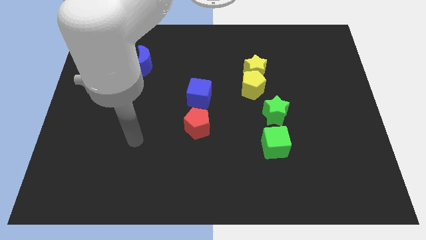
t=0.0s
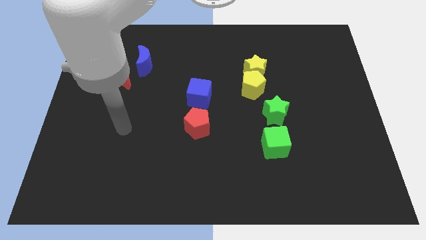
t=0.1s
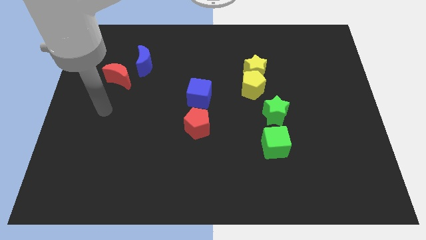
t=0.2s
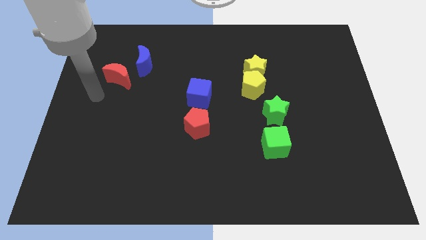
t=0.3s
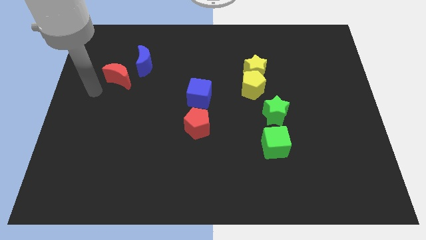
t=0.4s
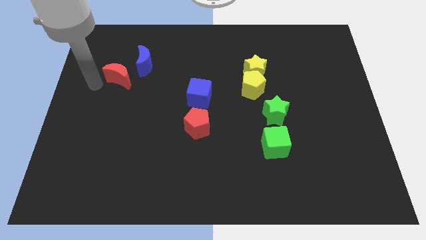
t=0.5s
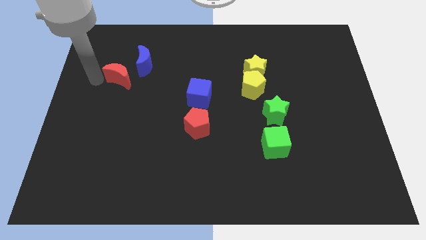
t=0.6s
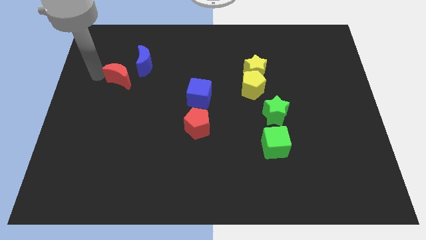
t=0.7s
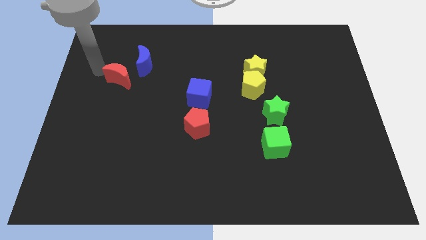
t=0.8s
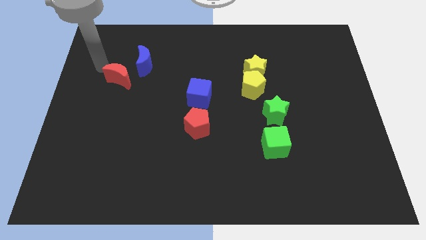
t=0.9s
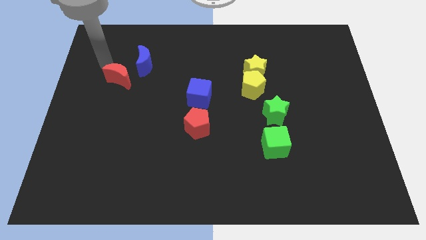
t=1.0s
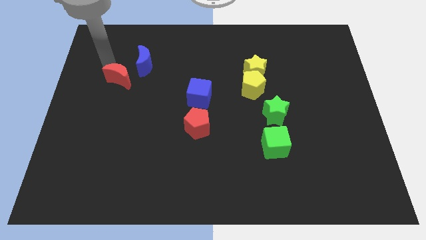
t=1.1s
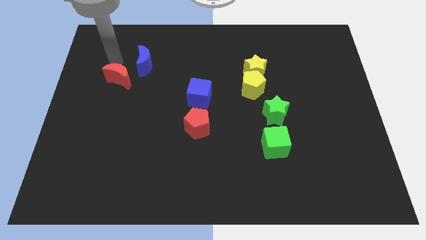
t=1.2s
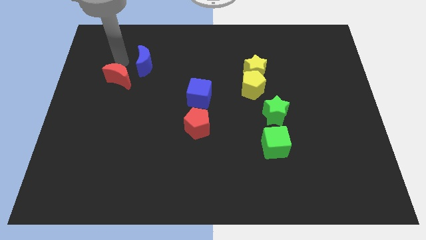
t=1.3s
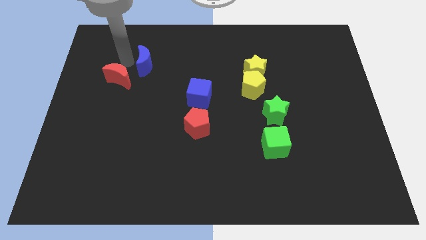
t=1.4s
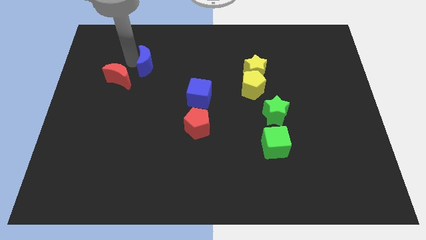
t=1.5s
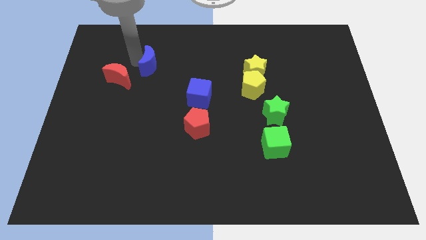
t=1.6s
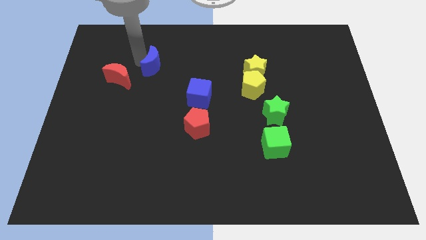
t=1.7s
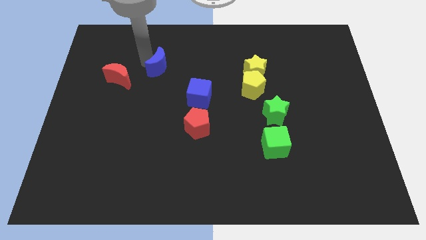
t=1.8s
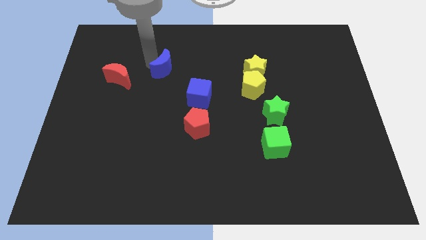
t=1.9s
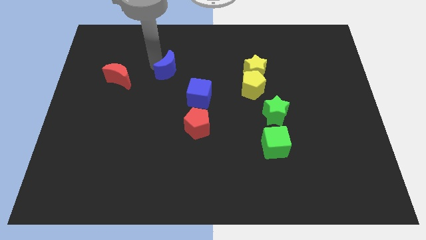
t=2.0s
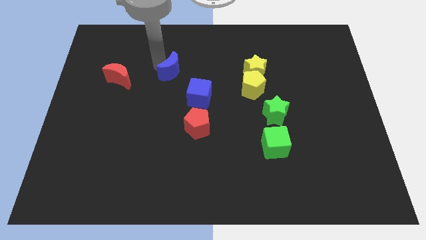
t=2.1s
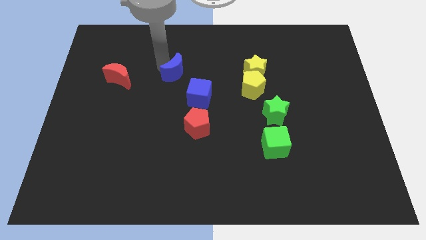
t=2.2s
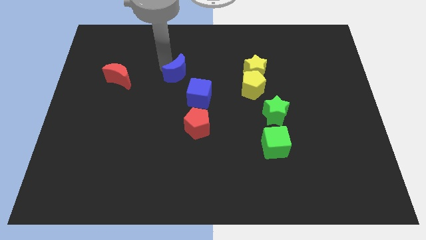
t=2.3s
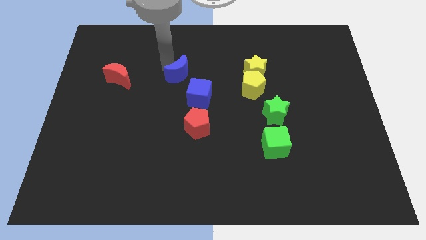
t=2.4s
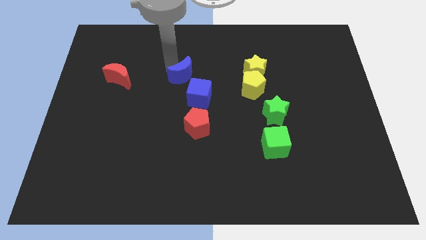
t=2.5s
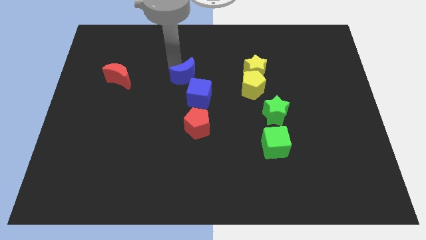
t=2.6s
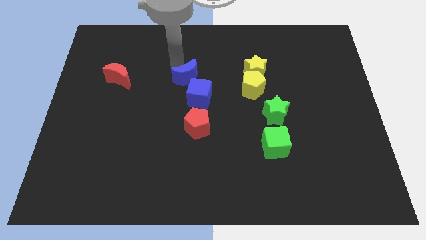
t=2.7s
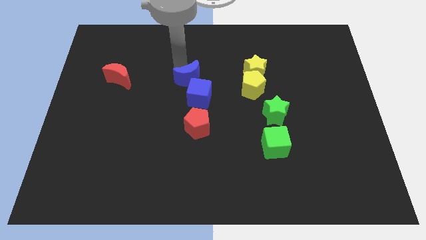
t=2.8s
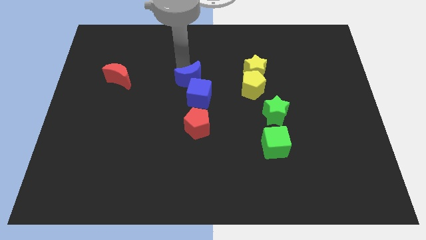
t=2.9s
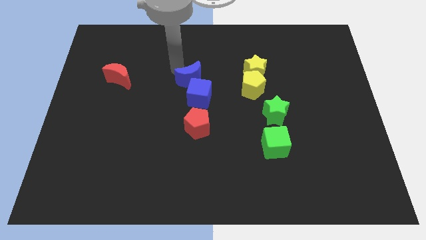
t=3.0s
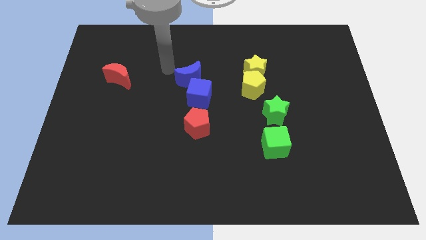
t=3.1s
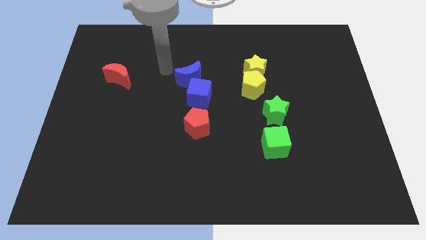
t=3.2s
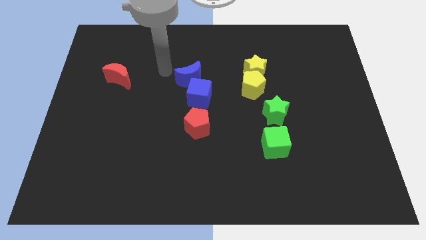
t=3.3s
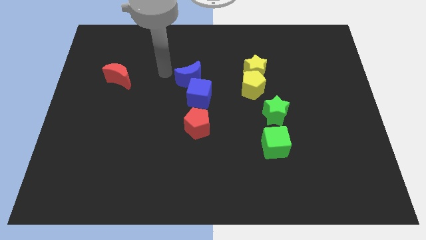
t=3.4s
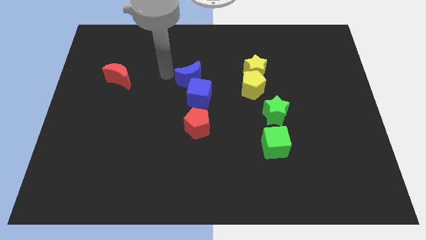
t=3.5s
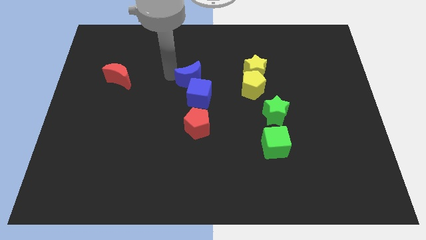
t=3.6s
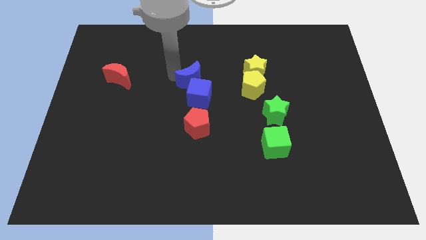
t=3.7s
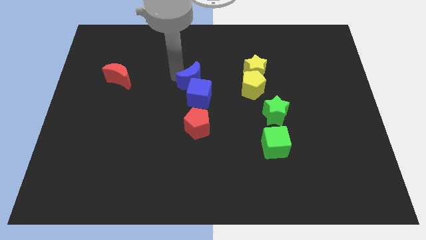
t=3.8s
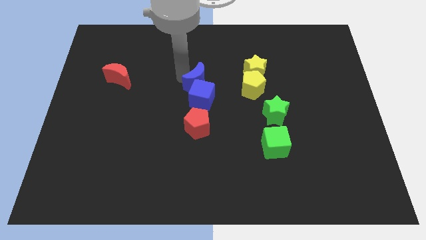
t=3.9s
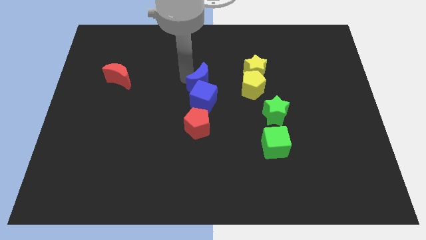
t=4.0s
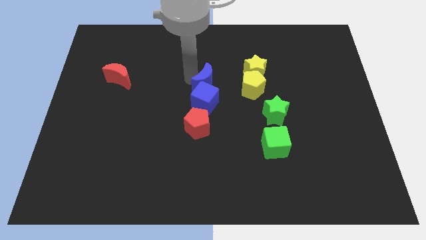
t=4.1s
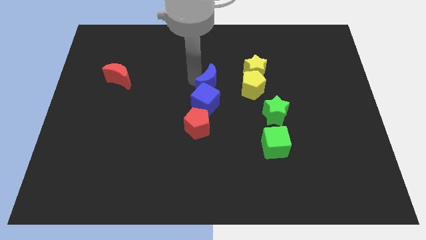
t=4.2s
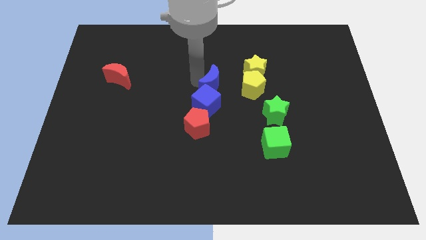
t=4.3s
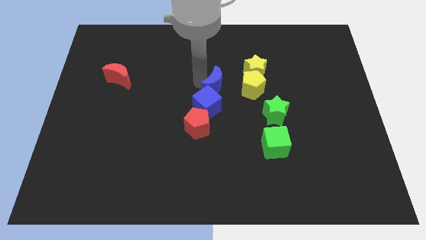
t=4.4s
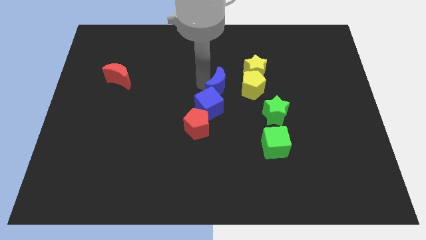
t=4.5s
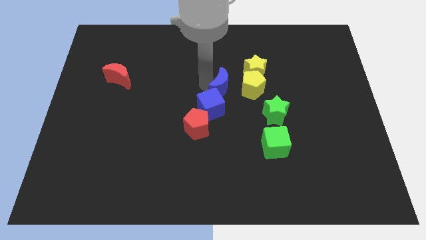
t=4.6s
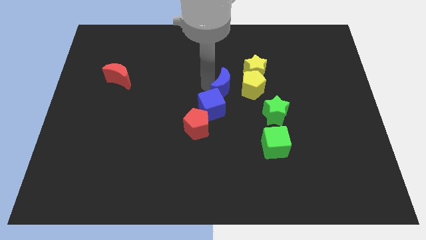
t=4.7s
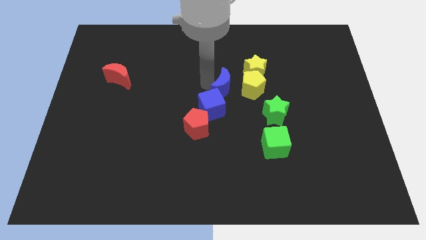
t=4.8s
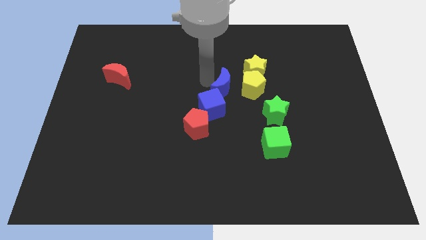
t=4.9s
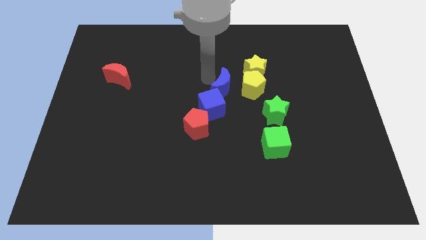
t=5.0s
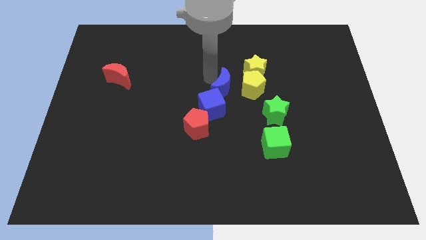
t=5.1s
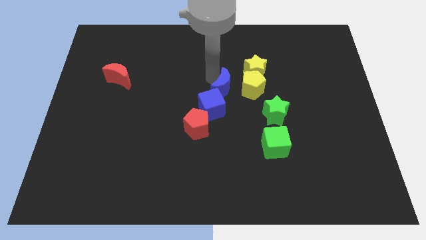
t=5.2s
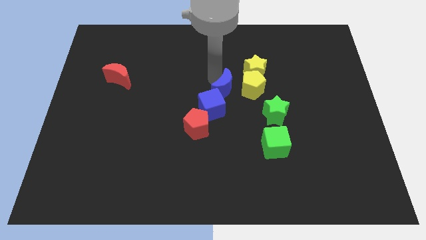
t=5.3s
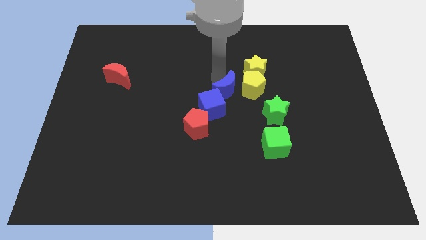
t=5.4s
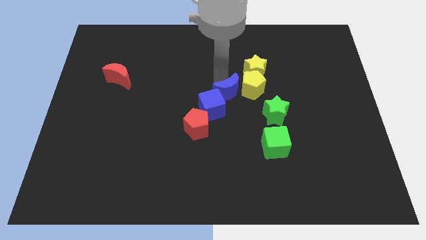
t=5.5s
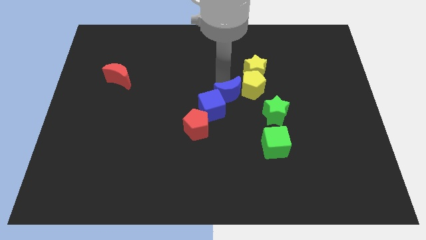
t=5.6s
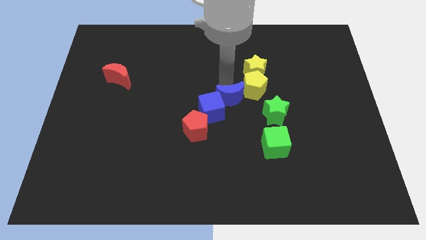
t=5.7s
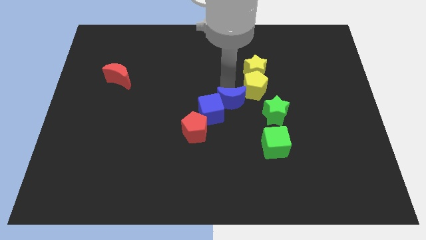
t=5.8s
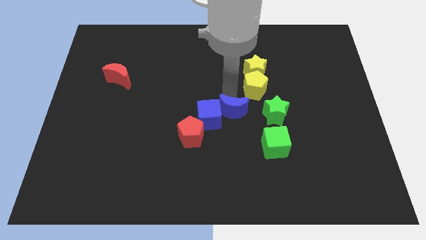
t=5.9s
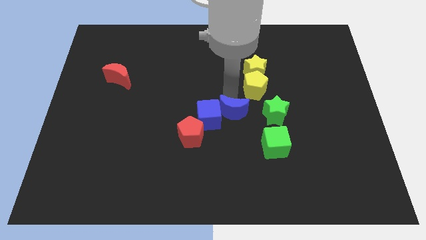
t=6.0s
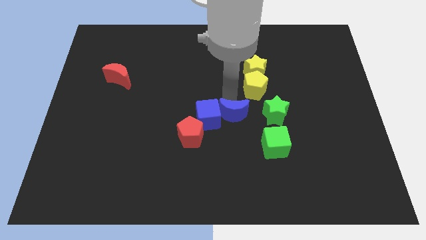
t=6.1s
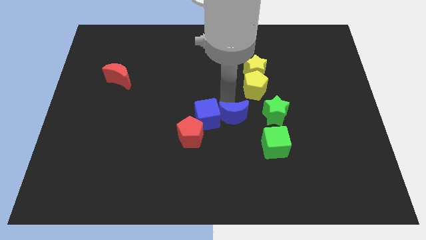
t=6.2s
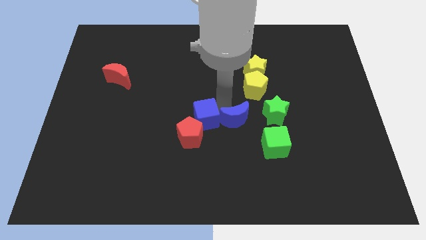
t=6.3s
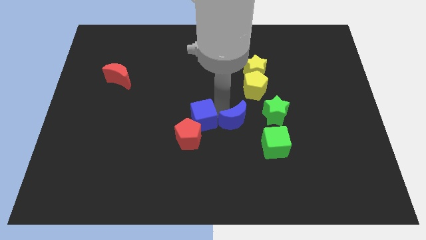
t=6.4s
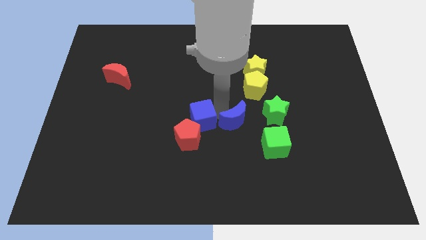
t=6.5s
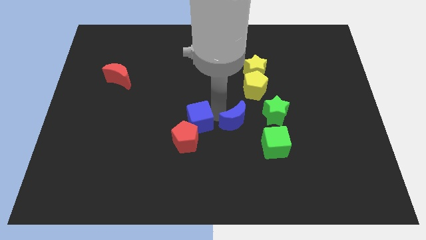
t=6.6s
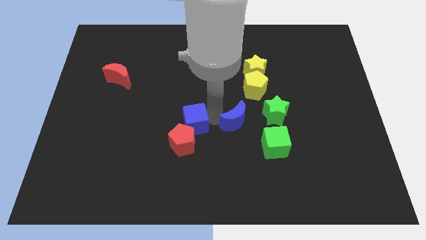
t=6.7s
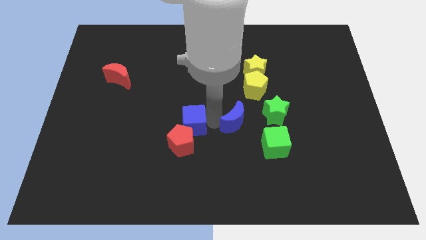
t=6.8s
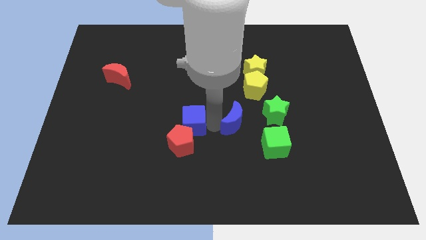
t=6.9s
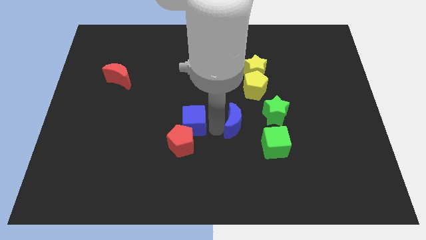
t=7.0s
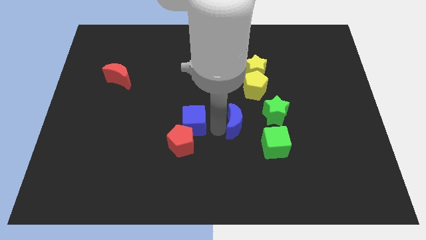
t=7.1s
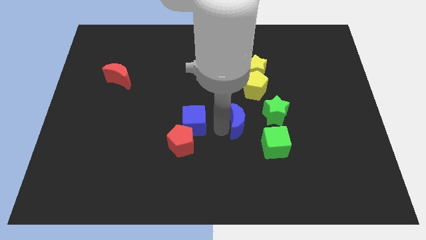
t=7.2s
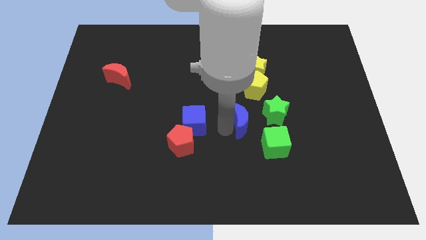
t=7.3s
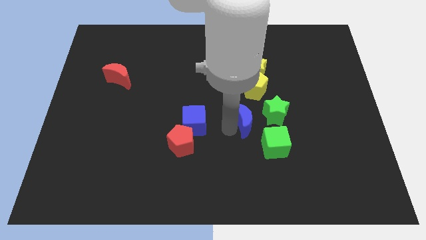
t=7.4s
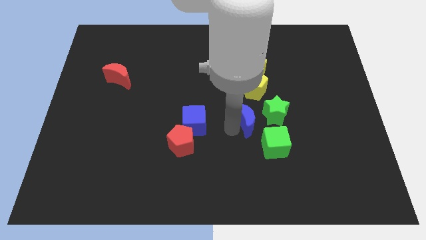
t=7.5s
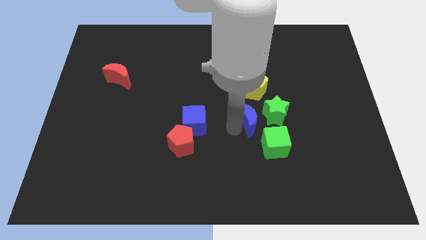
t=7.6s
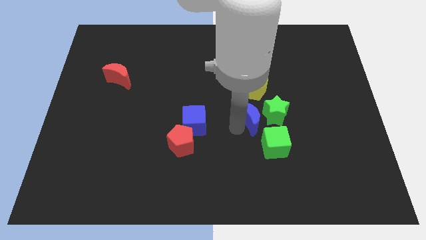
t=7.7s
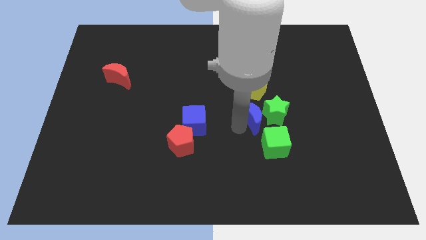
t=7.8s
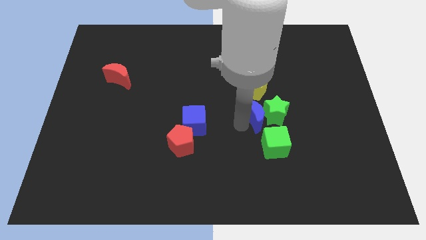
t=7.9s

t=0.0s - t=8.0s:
slide the blue moon close to the green star

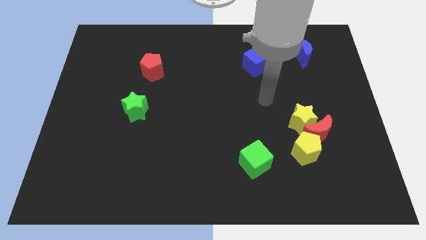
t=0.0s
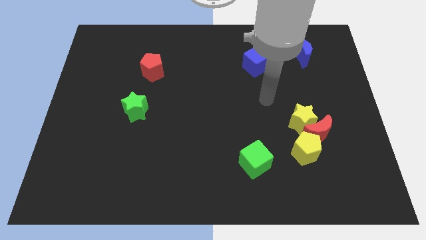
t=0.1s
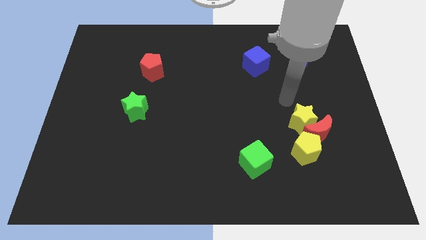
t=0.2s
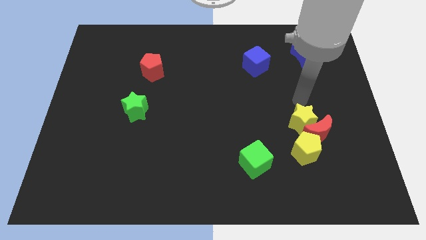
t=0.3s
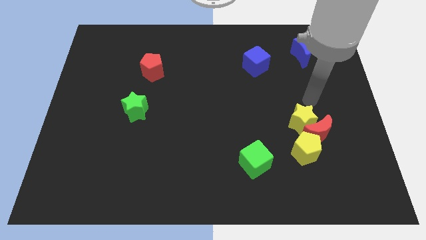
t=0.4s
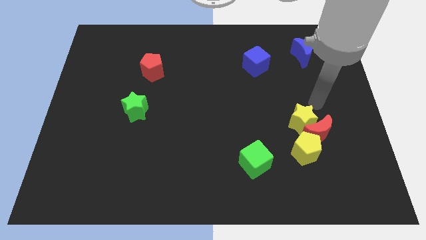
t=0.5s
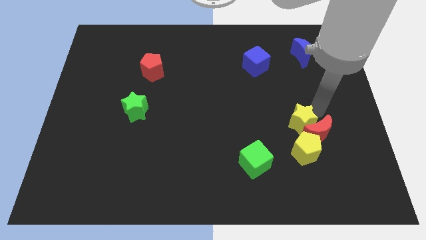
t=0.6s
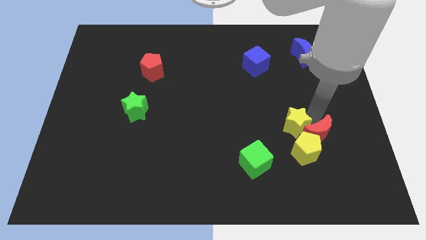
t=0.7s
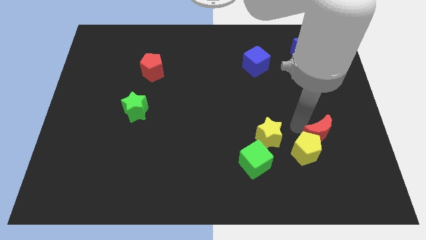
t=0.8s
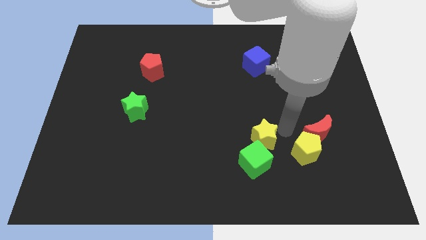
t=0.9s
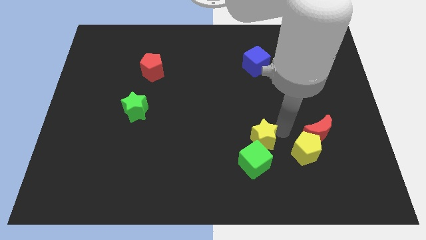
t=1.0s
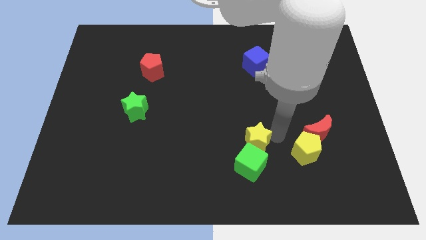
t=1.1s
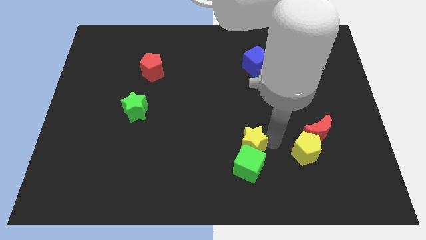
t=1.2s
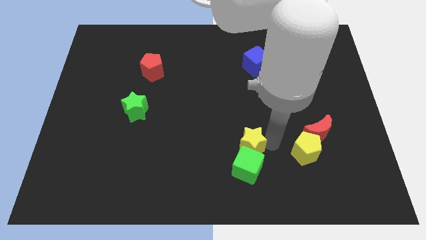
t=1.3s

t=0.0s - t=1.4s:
put the yellow star close to the green cube
